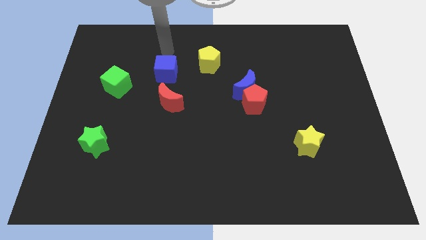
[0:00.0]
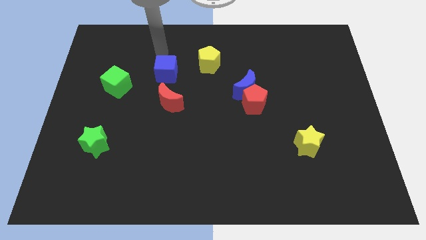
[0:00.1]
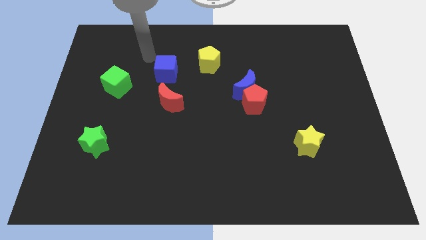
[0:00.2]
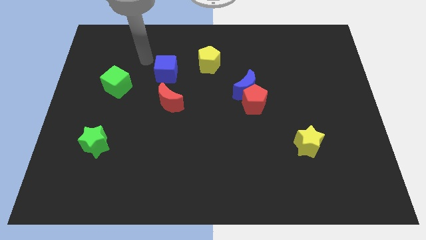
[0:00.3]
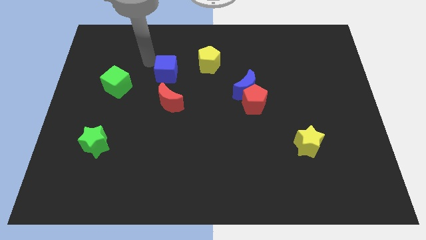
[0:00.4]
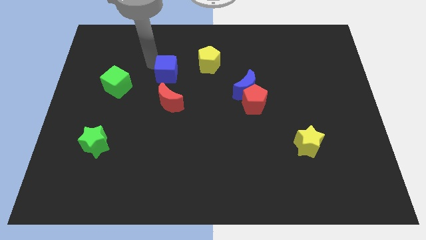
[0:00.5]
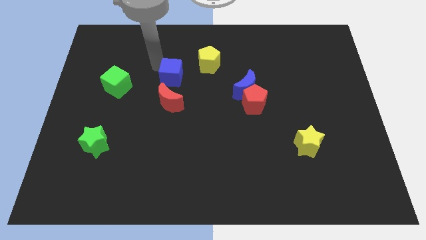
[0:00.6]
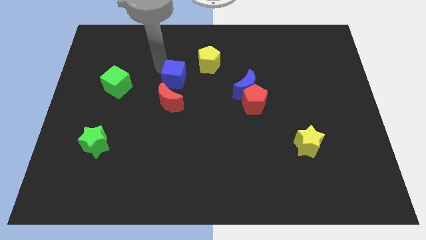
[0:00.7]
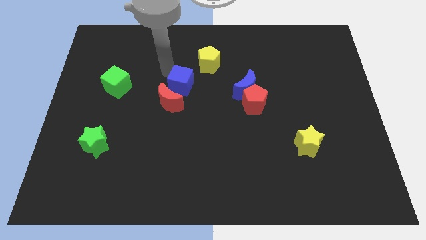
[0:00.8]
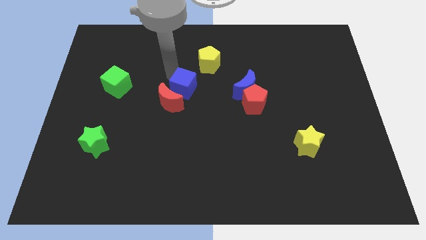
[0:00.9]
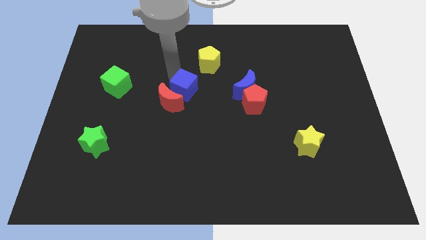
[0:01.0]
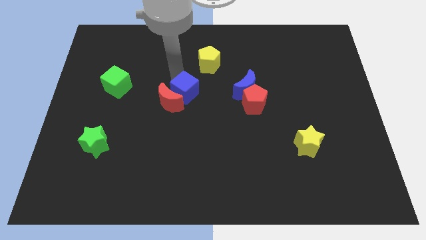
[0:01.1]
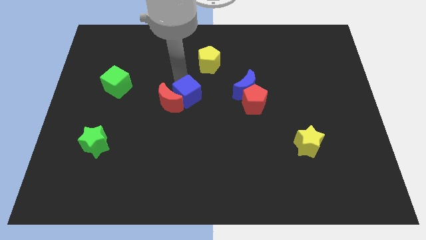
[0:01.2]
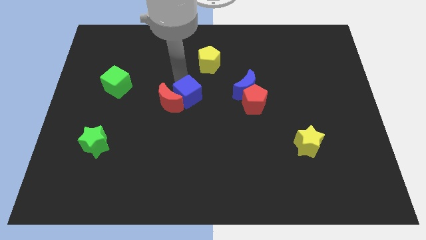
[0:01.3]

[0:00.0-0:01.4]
push the blue cube into the red crescent

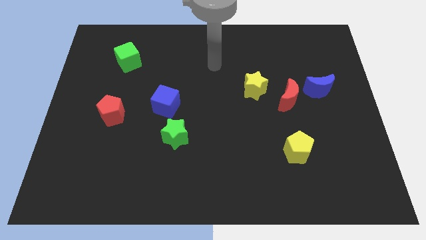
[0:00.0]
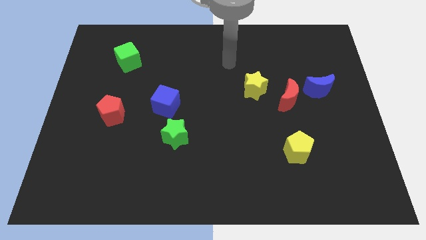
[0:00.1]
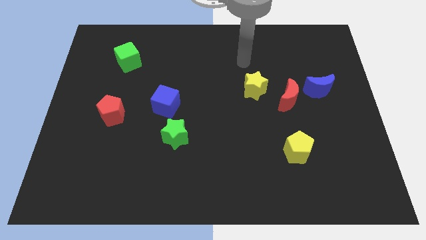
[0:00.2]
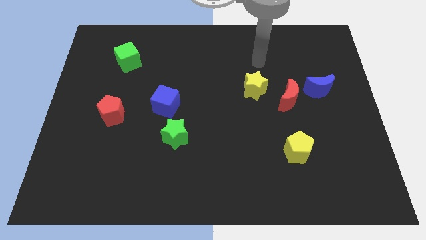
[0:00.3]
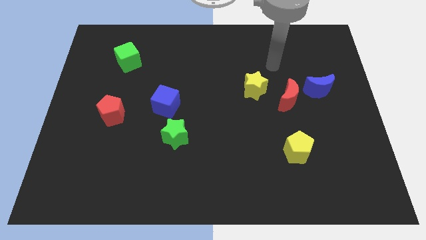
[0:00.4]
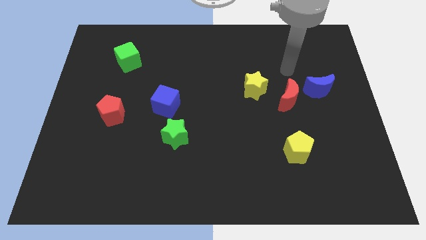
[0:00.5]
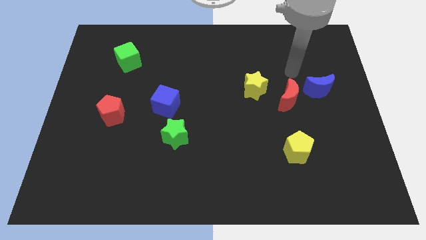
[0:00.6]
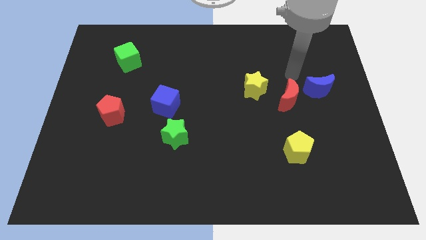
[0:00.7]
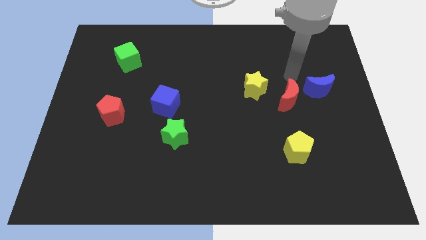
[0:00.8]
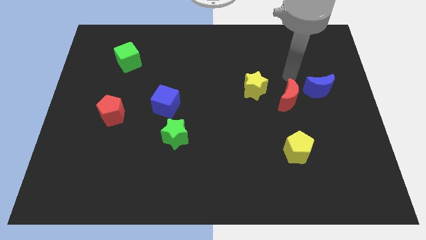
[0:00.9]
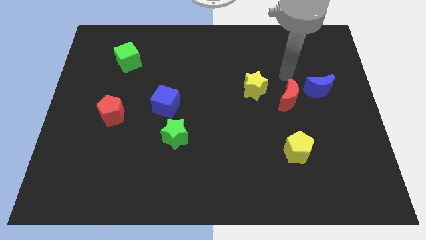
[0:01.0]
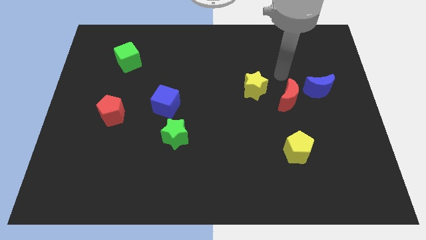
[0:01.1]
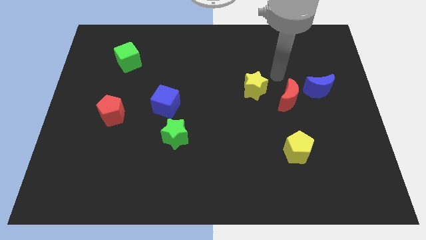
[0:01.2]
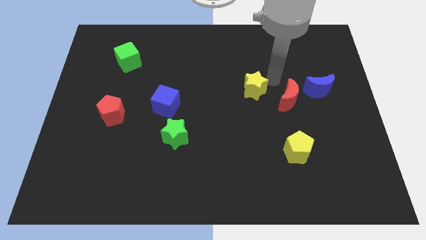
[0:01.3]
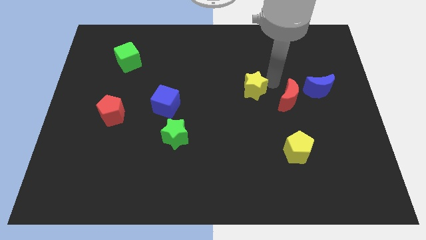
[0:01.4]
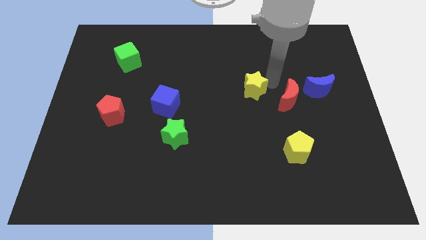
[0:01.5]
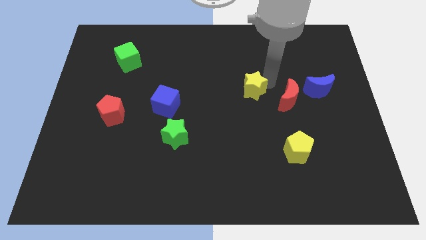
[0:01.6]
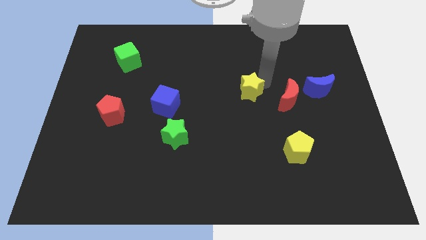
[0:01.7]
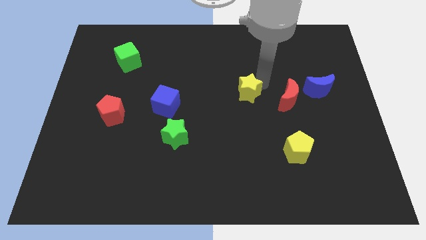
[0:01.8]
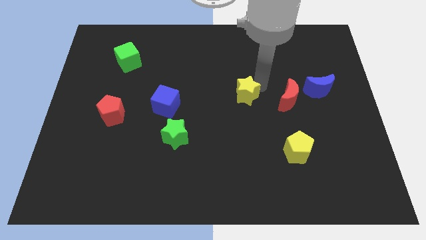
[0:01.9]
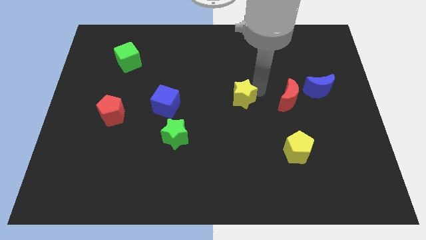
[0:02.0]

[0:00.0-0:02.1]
push yellow star to the left side of the red moon

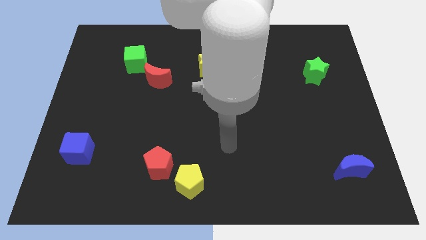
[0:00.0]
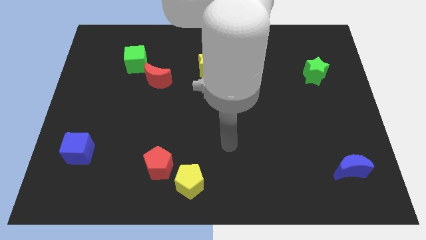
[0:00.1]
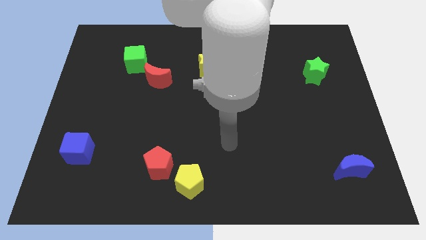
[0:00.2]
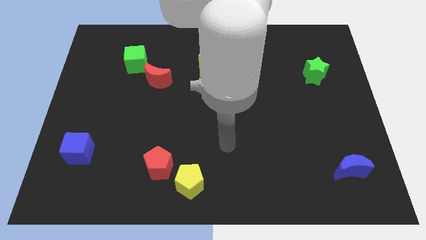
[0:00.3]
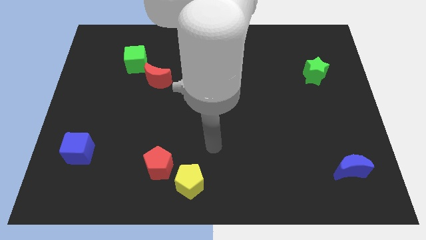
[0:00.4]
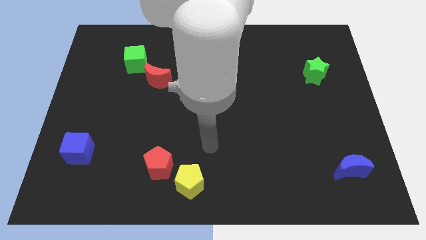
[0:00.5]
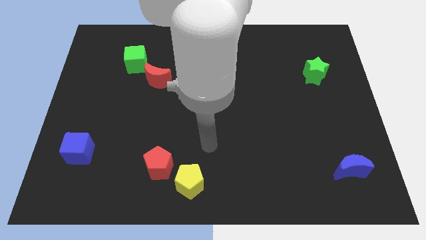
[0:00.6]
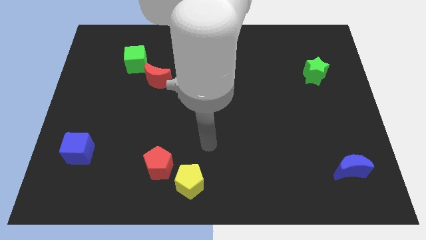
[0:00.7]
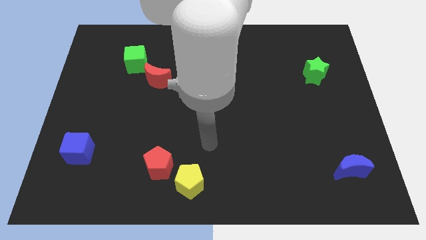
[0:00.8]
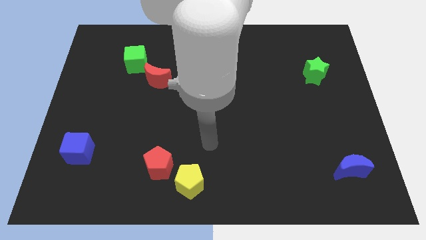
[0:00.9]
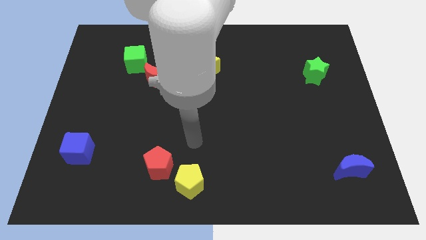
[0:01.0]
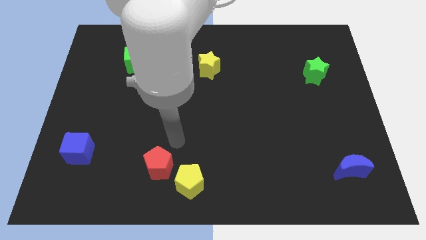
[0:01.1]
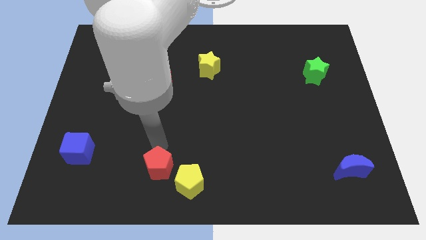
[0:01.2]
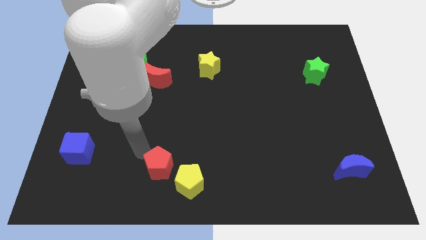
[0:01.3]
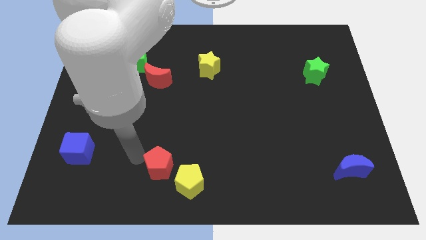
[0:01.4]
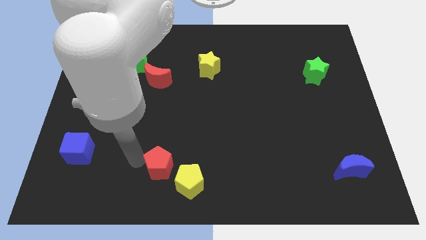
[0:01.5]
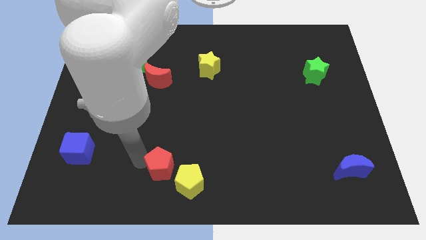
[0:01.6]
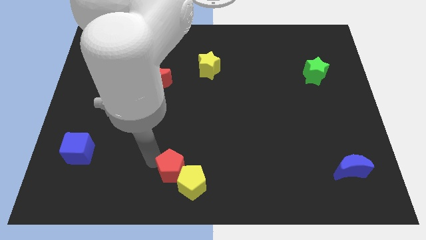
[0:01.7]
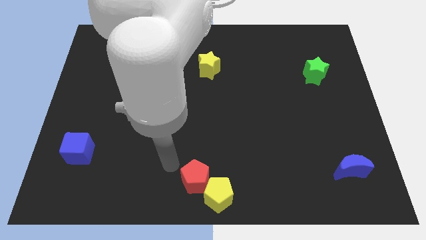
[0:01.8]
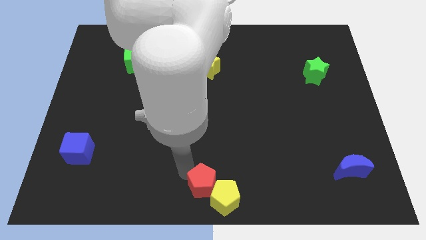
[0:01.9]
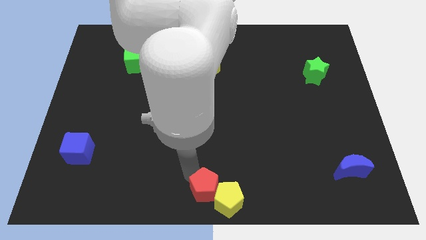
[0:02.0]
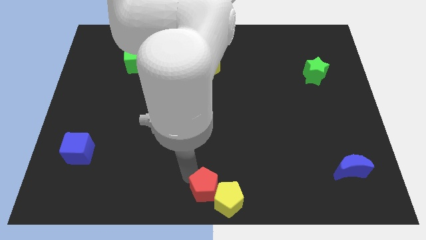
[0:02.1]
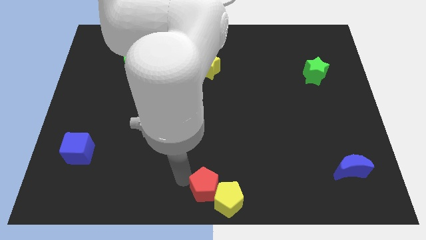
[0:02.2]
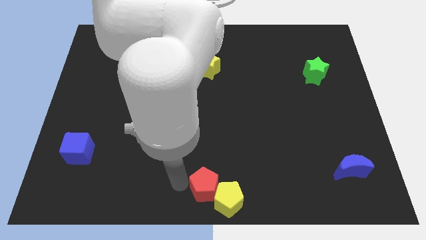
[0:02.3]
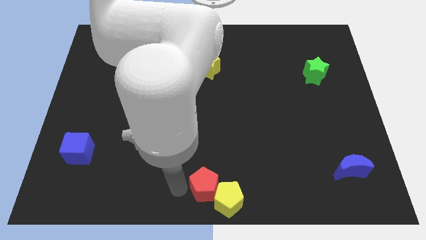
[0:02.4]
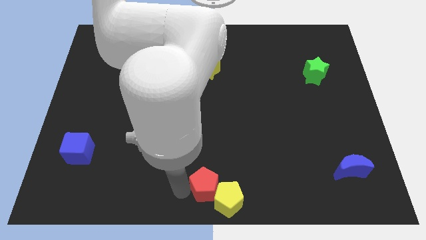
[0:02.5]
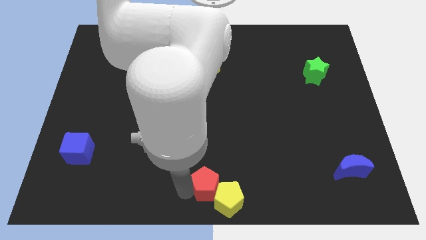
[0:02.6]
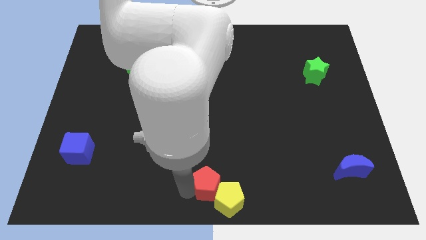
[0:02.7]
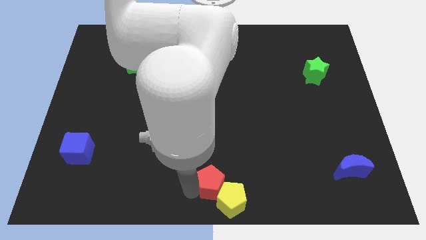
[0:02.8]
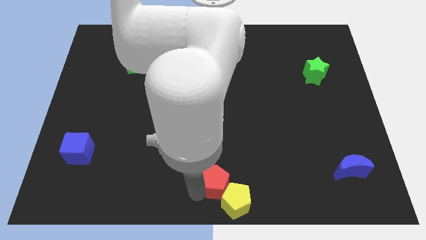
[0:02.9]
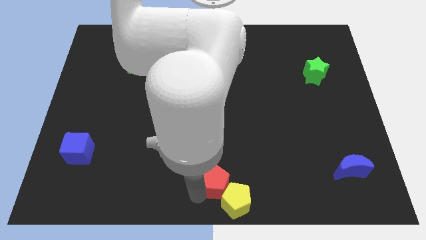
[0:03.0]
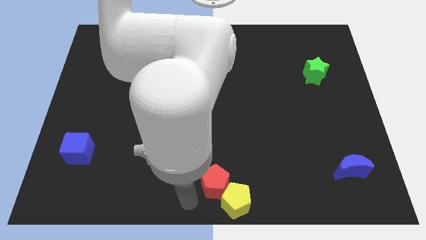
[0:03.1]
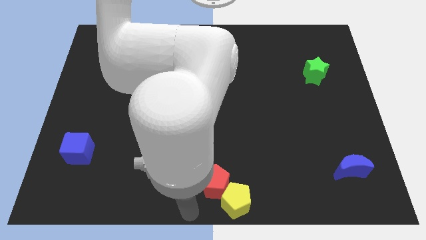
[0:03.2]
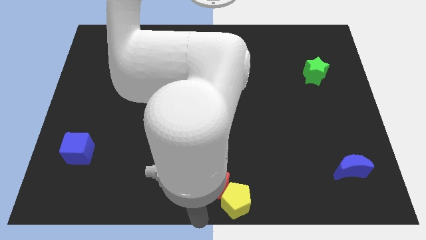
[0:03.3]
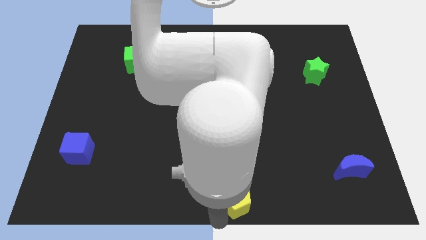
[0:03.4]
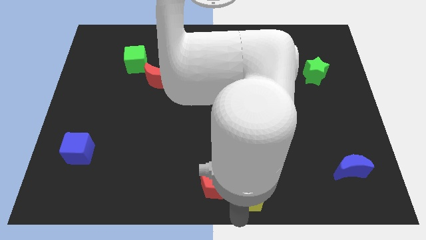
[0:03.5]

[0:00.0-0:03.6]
push the red pentagon into yellow pentagon

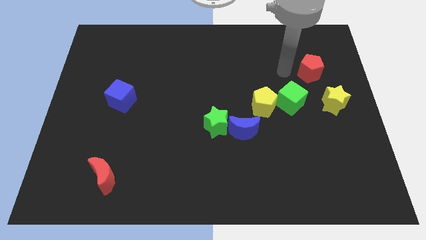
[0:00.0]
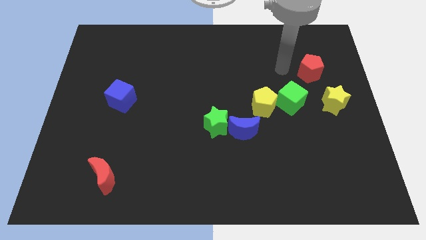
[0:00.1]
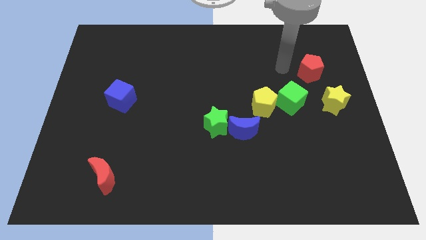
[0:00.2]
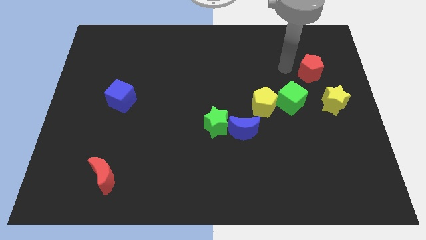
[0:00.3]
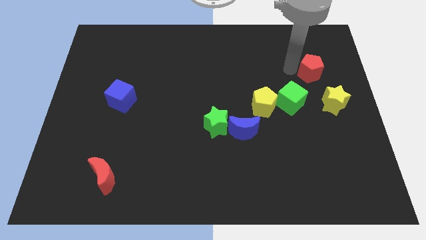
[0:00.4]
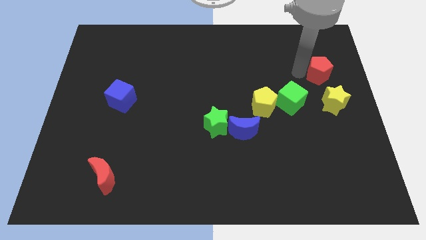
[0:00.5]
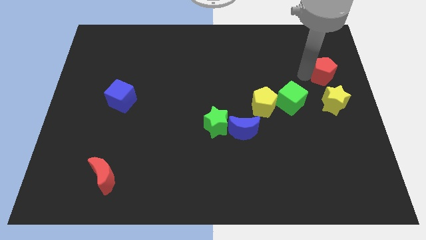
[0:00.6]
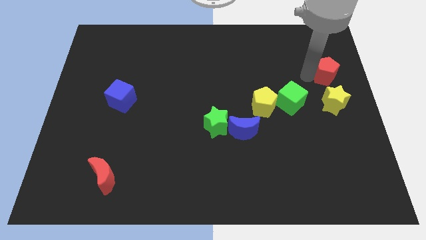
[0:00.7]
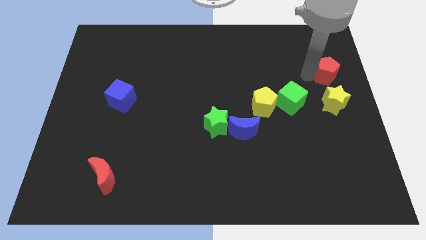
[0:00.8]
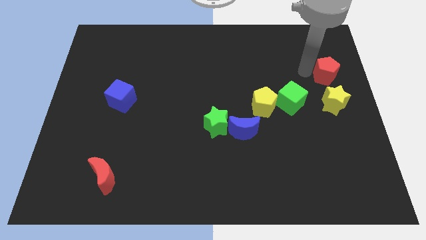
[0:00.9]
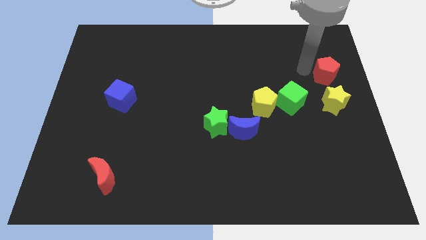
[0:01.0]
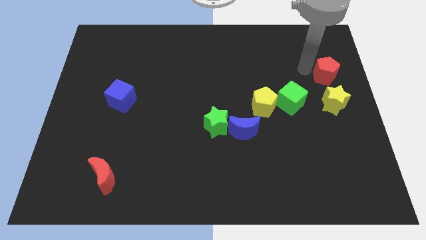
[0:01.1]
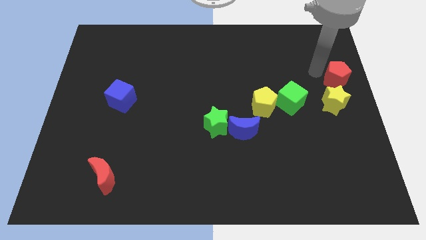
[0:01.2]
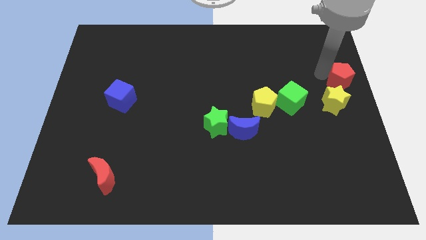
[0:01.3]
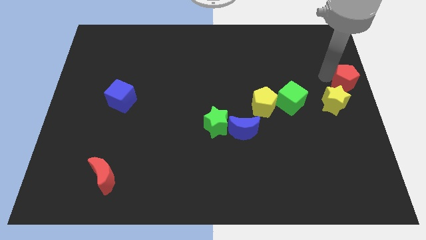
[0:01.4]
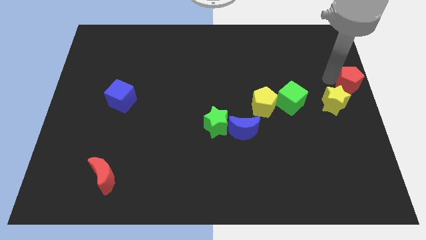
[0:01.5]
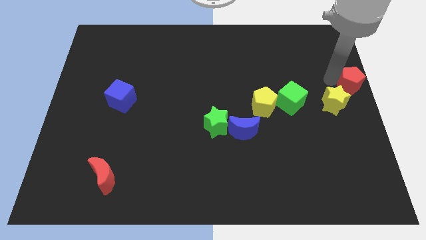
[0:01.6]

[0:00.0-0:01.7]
push the red pentagon to the right center of the board

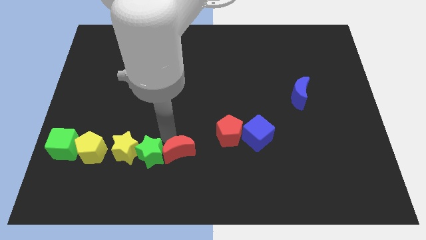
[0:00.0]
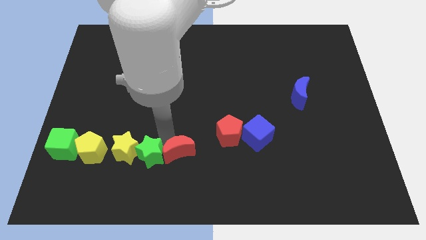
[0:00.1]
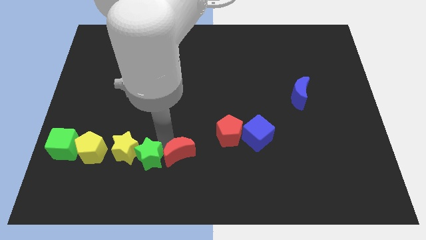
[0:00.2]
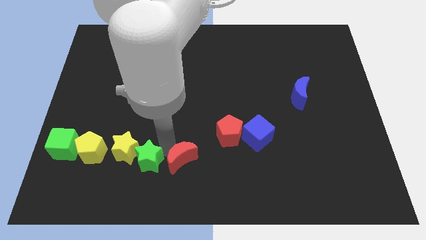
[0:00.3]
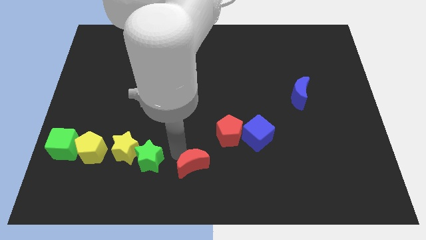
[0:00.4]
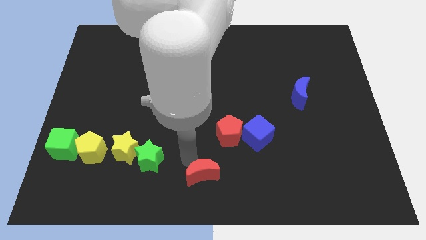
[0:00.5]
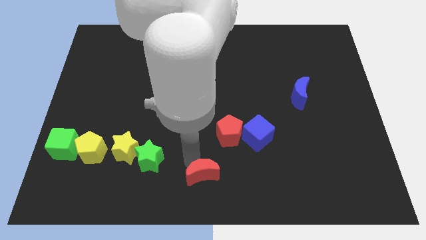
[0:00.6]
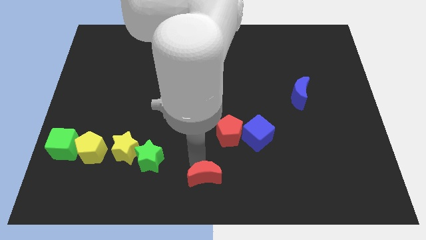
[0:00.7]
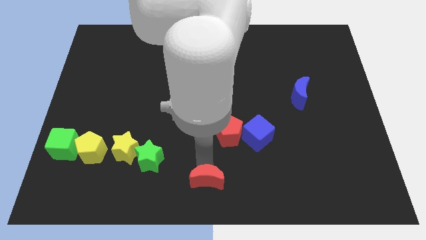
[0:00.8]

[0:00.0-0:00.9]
separate the red crescent and the green star
